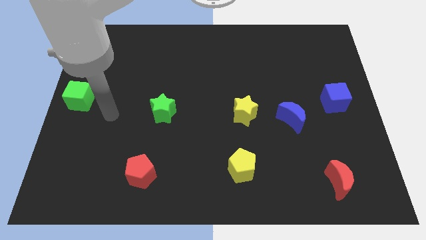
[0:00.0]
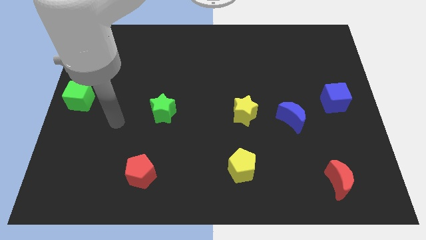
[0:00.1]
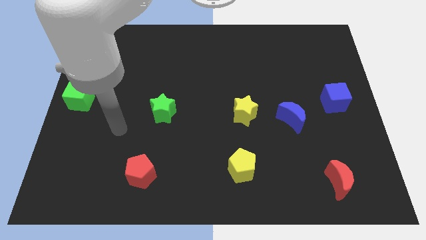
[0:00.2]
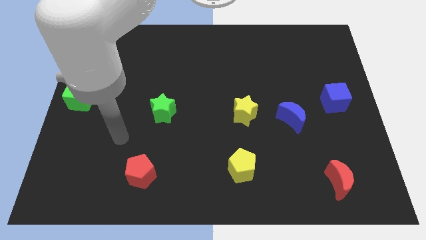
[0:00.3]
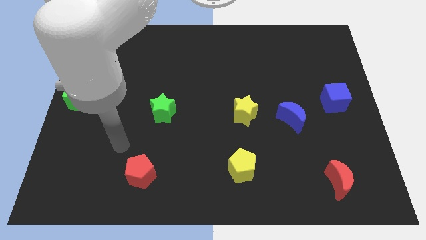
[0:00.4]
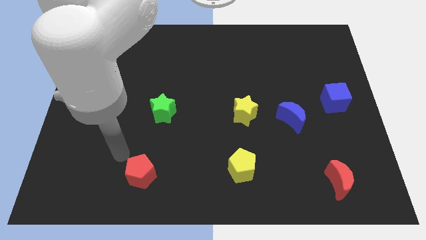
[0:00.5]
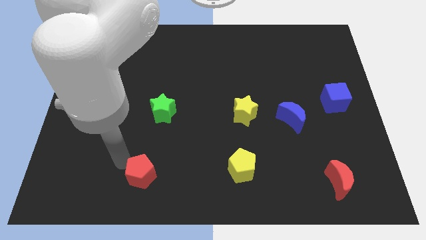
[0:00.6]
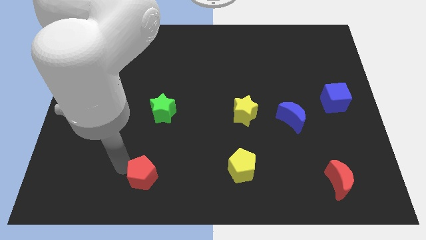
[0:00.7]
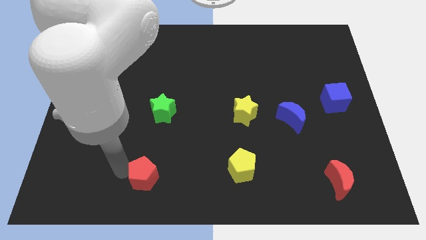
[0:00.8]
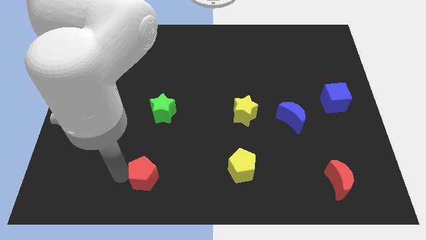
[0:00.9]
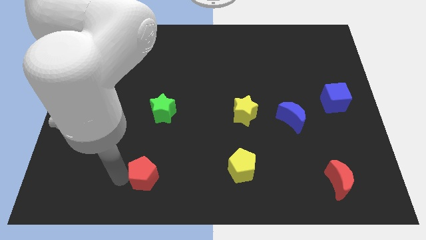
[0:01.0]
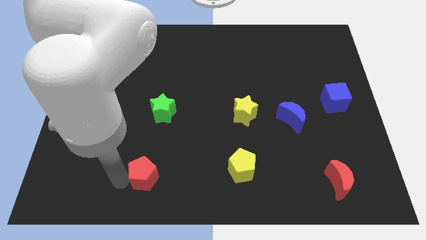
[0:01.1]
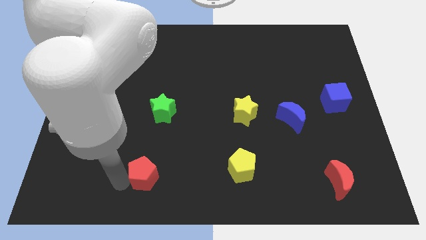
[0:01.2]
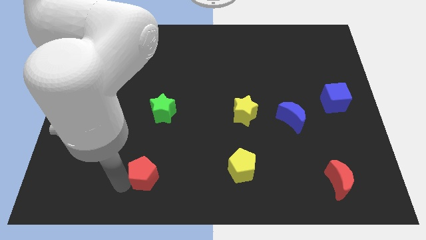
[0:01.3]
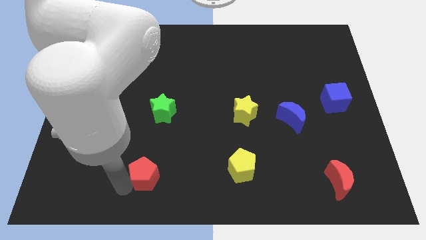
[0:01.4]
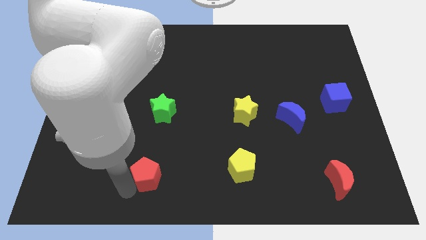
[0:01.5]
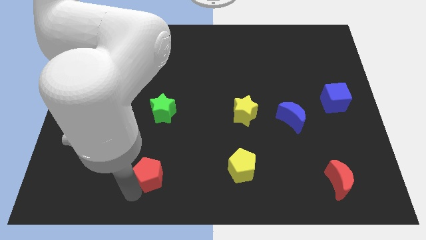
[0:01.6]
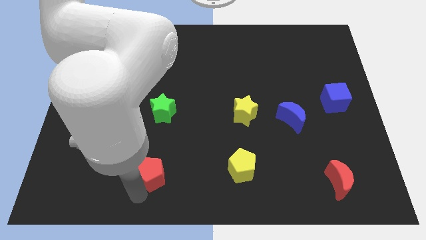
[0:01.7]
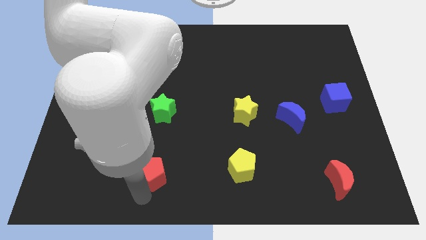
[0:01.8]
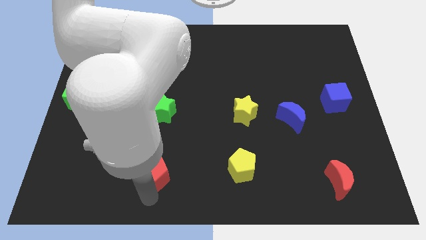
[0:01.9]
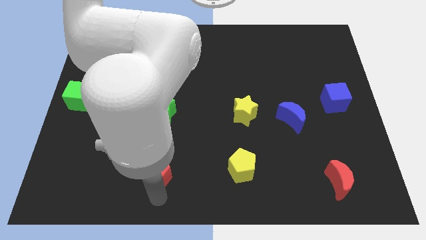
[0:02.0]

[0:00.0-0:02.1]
move the red pentagon from the bottom center

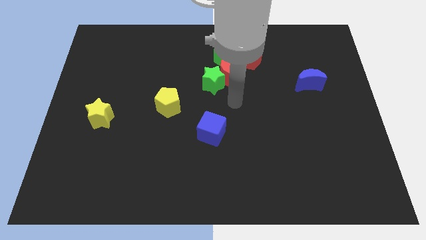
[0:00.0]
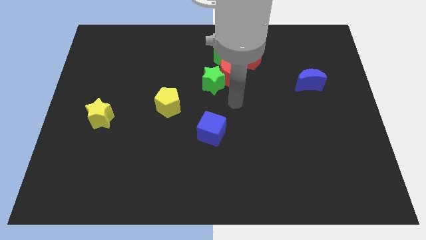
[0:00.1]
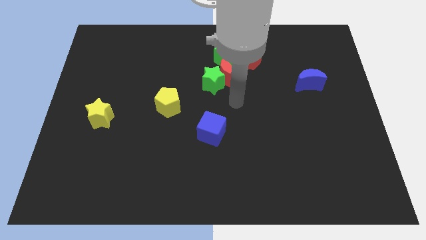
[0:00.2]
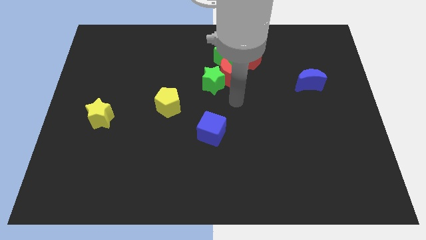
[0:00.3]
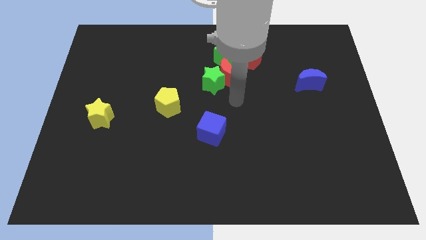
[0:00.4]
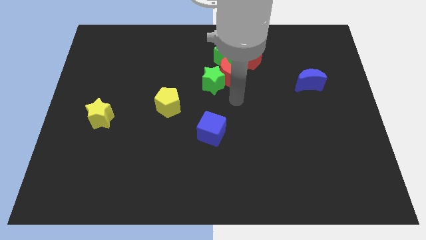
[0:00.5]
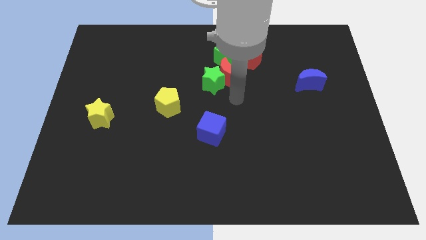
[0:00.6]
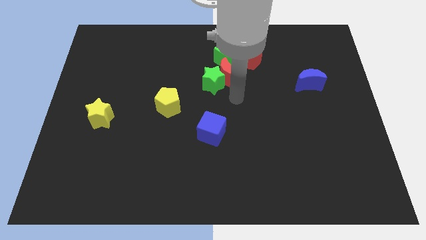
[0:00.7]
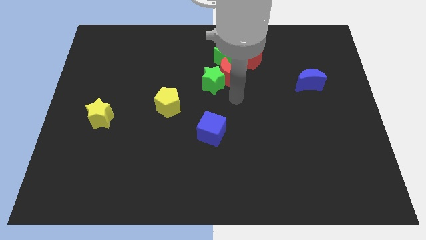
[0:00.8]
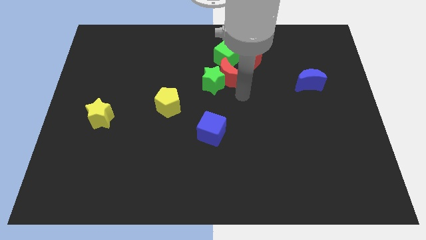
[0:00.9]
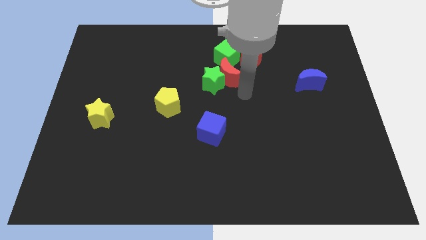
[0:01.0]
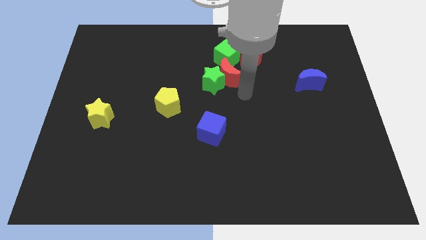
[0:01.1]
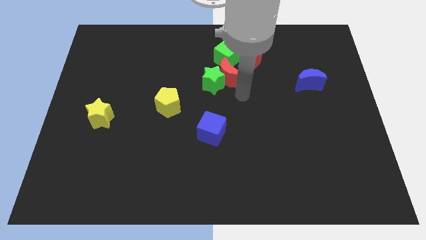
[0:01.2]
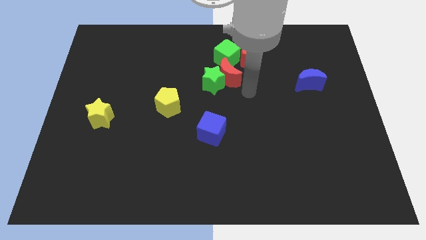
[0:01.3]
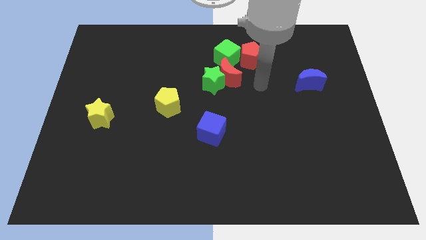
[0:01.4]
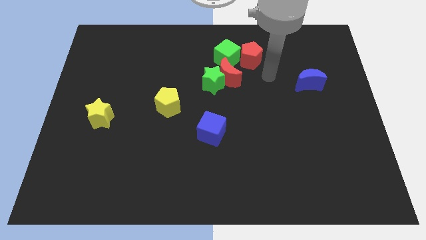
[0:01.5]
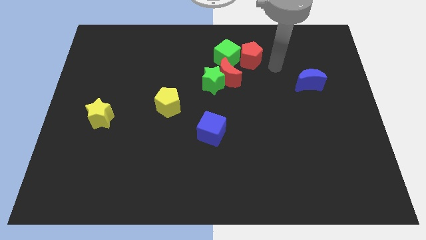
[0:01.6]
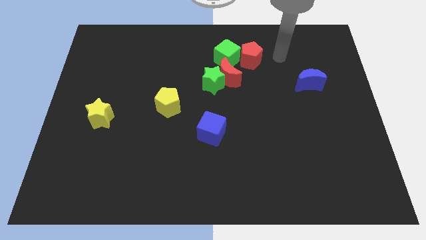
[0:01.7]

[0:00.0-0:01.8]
put your hand at the right side of the red pentagon

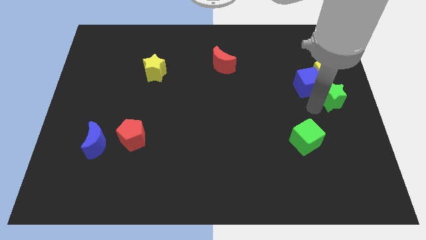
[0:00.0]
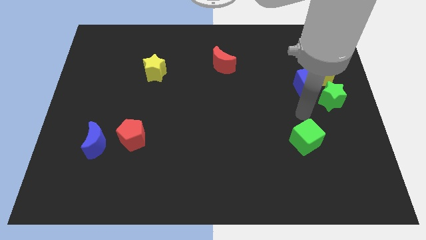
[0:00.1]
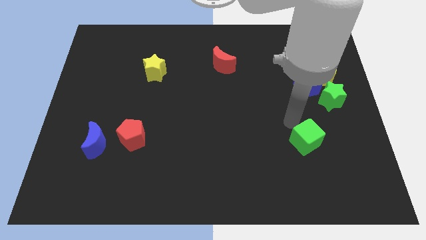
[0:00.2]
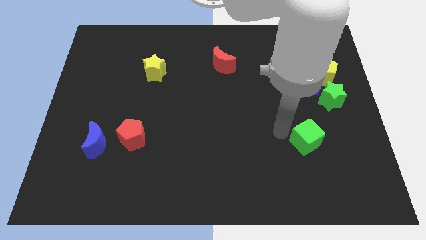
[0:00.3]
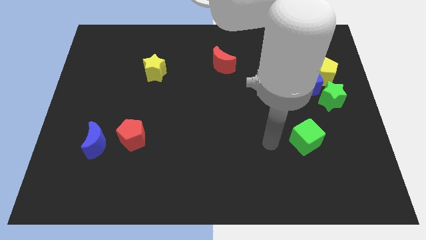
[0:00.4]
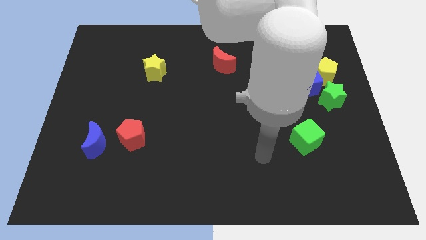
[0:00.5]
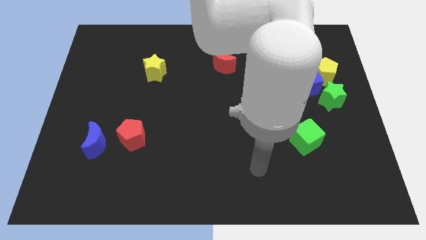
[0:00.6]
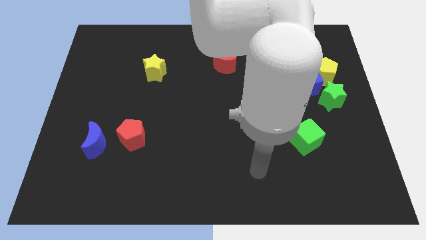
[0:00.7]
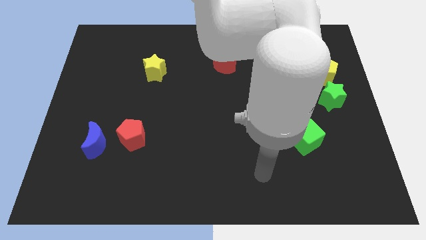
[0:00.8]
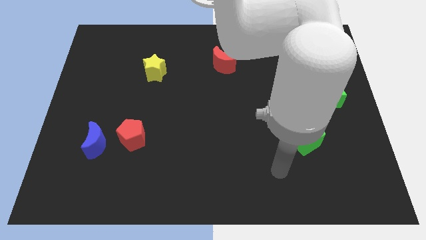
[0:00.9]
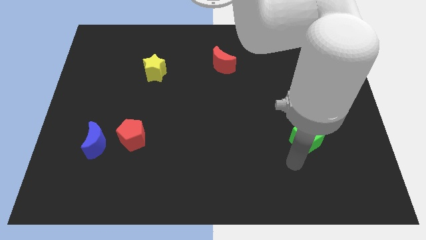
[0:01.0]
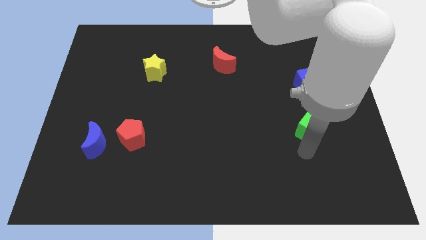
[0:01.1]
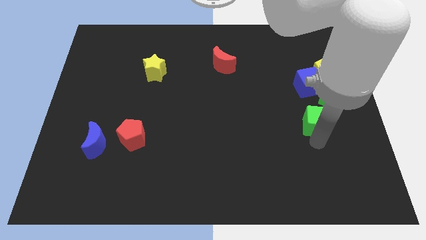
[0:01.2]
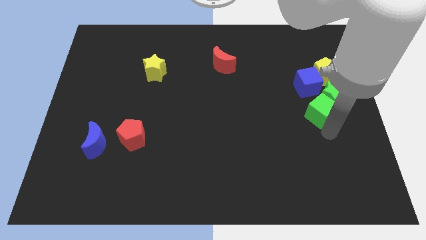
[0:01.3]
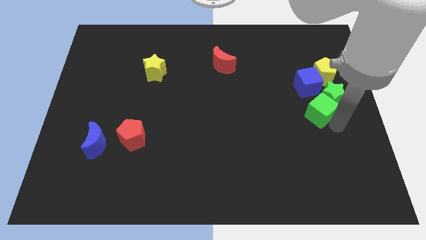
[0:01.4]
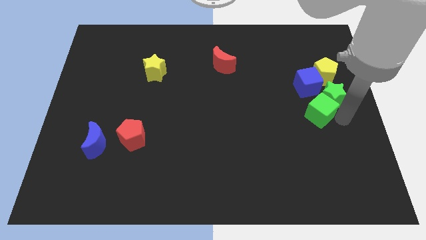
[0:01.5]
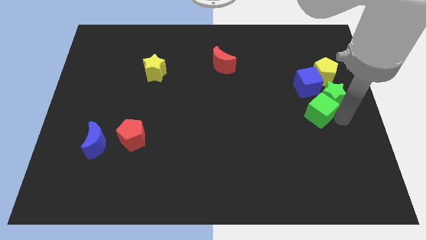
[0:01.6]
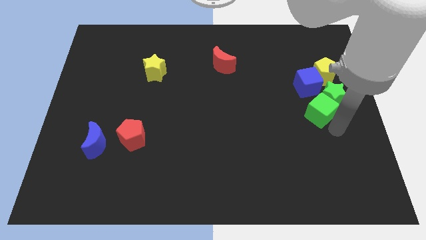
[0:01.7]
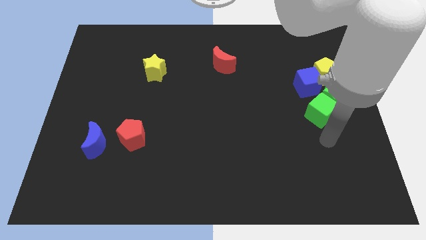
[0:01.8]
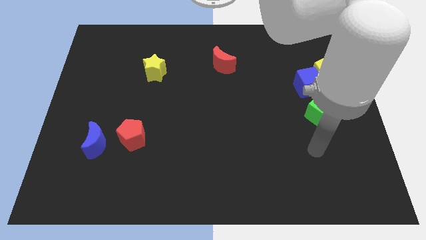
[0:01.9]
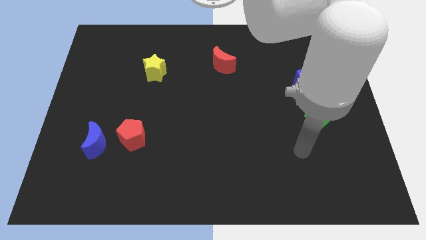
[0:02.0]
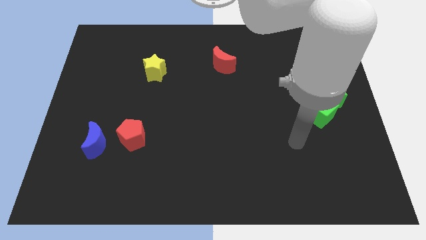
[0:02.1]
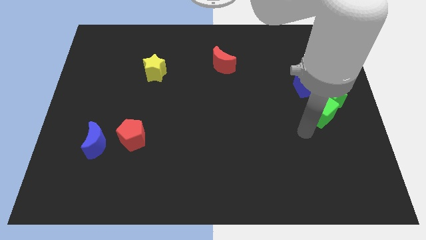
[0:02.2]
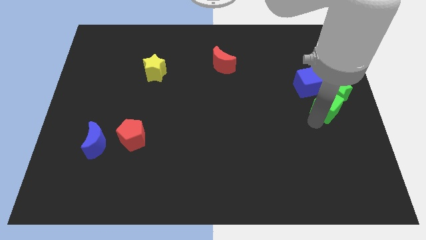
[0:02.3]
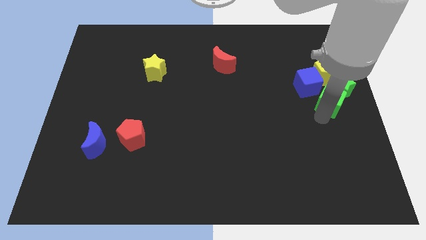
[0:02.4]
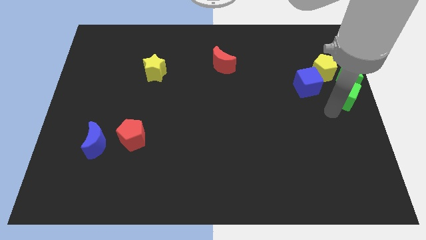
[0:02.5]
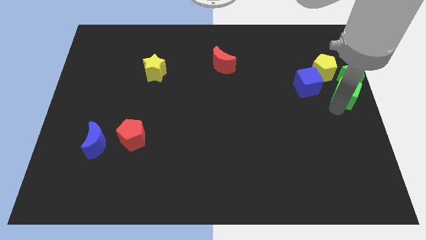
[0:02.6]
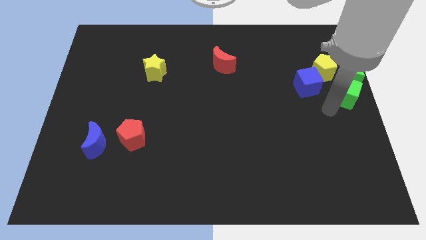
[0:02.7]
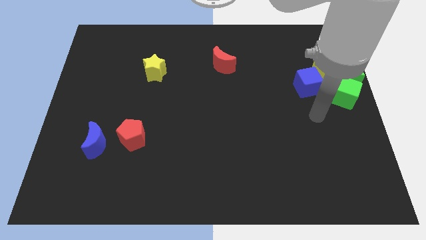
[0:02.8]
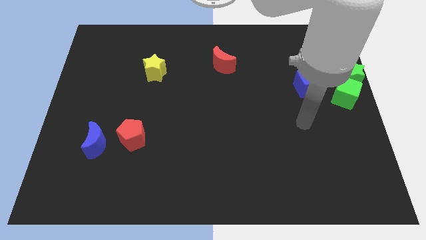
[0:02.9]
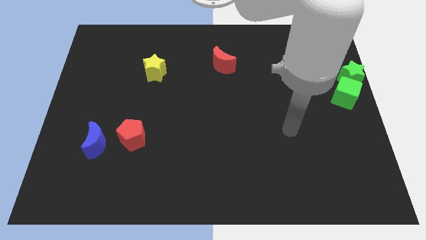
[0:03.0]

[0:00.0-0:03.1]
push the green cube into the green star

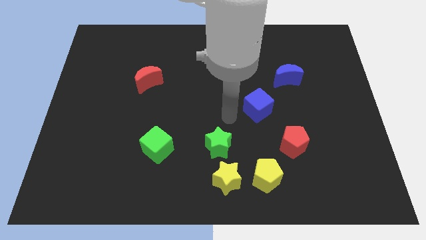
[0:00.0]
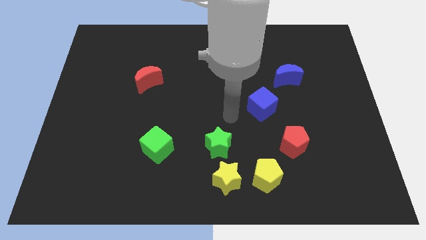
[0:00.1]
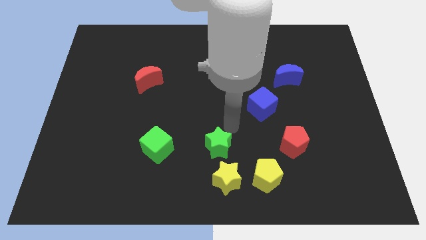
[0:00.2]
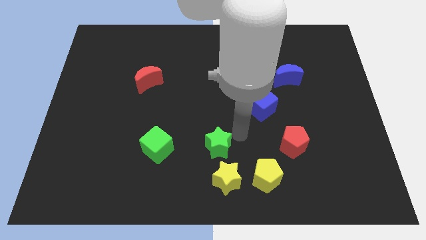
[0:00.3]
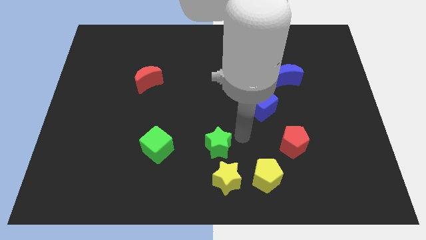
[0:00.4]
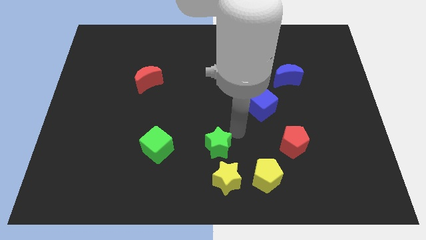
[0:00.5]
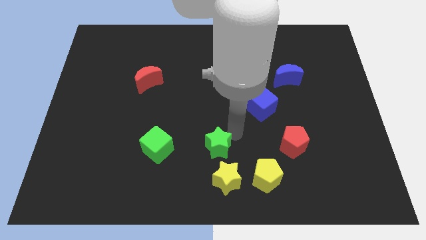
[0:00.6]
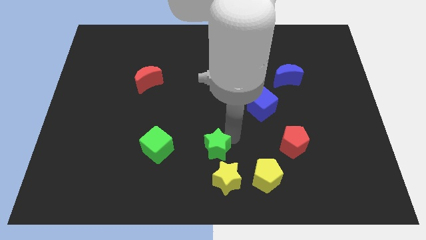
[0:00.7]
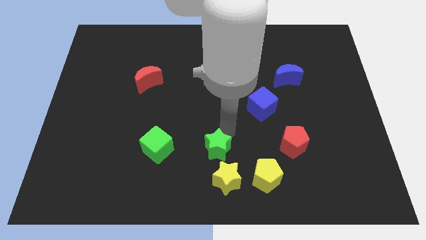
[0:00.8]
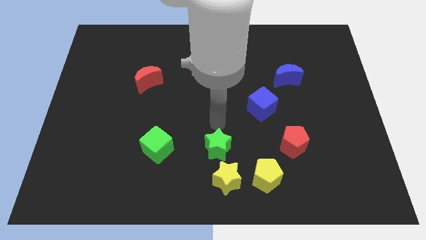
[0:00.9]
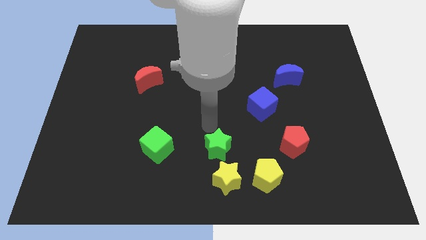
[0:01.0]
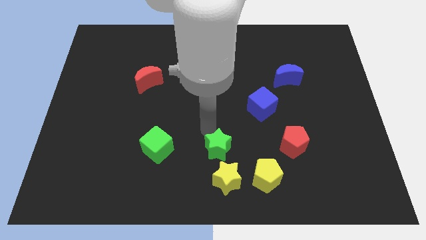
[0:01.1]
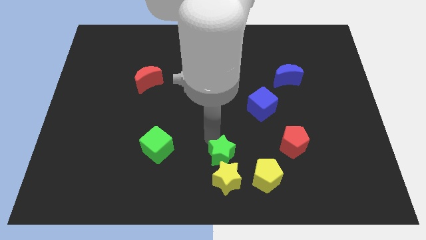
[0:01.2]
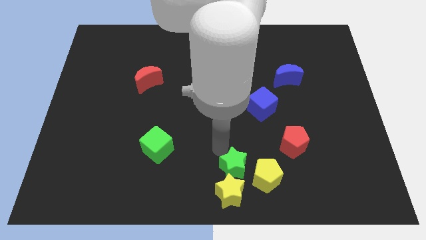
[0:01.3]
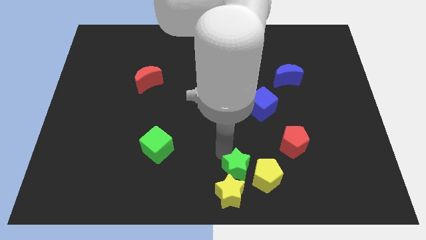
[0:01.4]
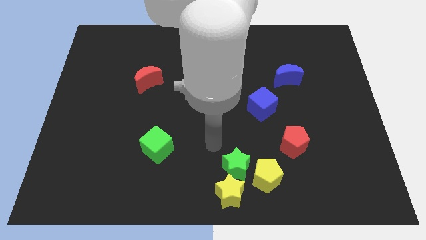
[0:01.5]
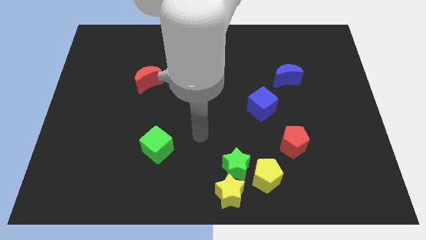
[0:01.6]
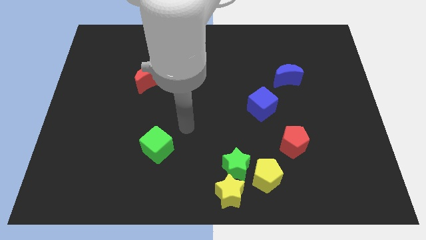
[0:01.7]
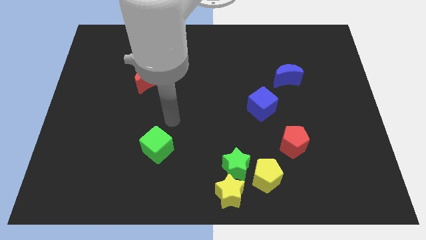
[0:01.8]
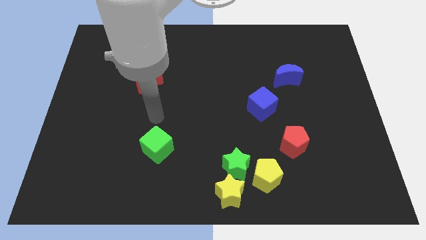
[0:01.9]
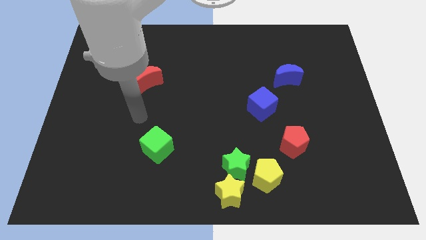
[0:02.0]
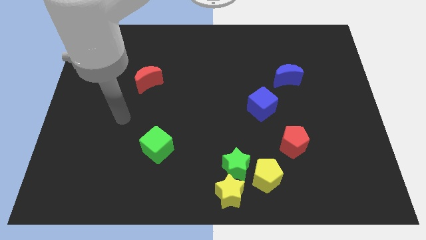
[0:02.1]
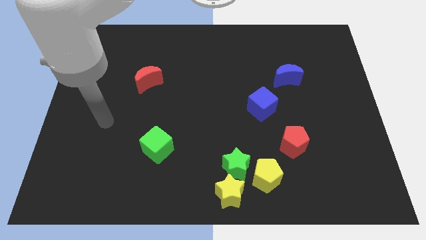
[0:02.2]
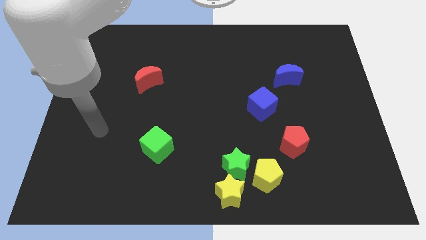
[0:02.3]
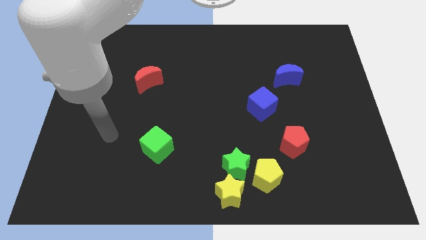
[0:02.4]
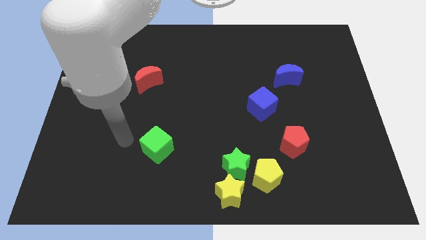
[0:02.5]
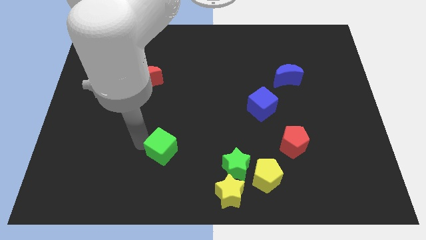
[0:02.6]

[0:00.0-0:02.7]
move the green star into the yellow star
